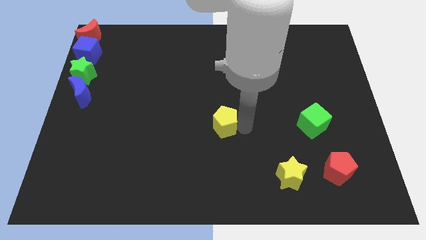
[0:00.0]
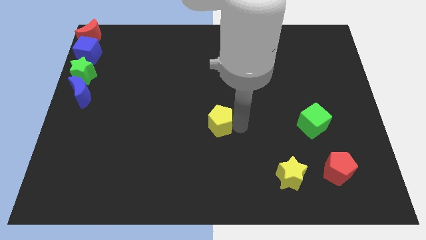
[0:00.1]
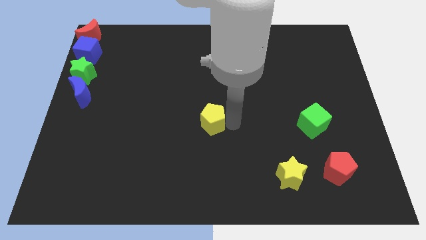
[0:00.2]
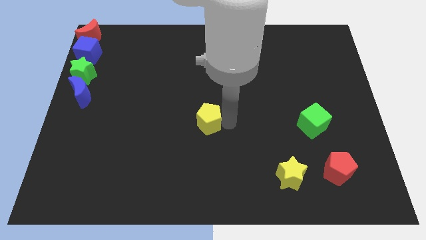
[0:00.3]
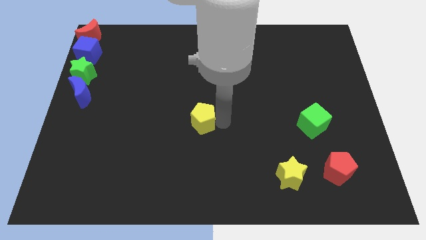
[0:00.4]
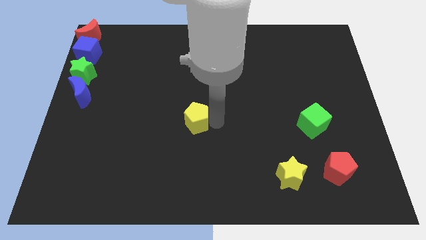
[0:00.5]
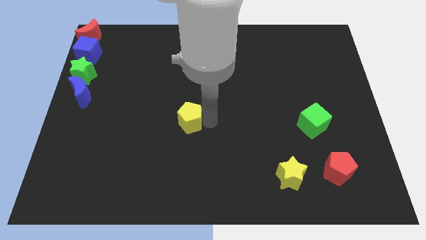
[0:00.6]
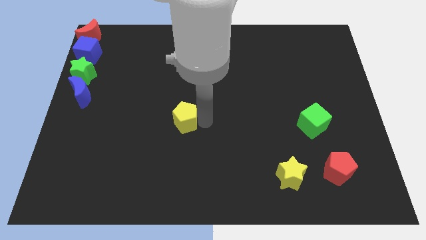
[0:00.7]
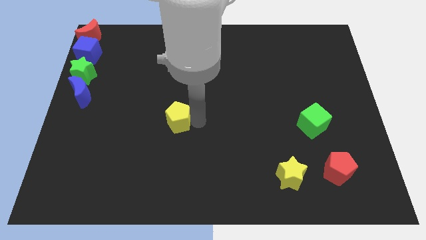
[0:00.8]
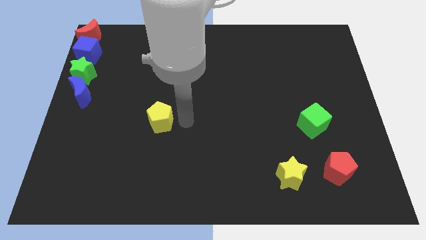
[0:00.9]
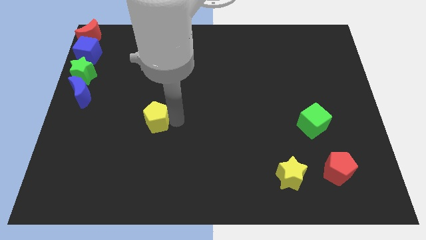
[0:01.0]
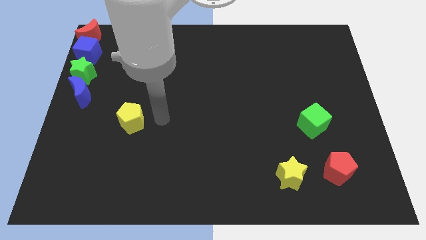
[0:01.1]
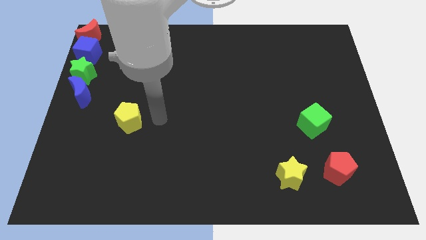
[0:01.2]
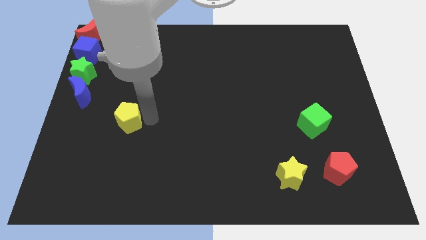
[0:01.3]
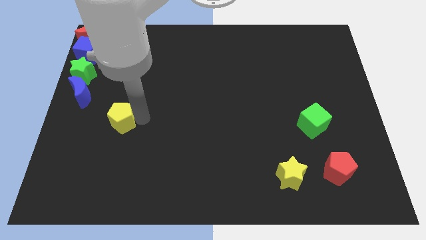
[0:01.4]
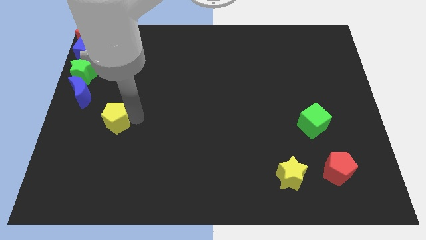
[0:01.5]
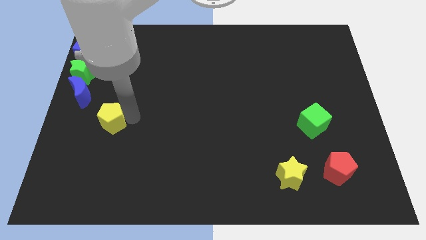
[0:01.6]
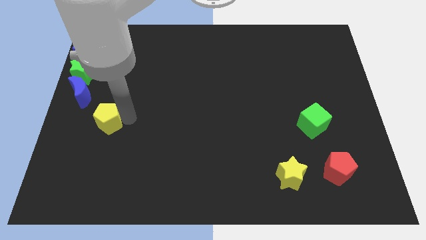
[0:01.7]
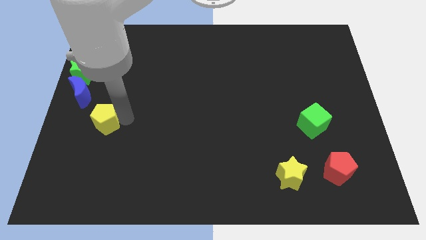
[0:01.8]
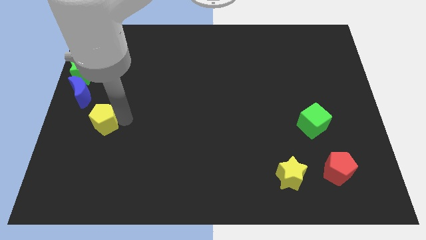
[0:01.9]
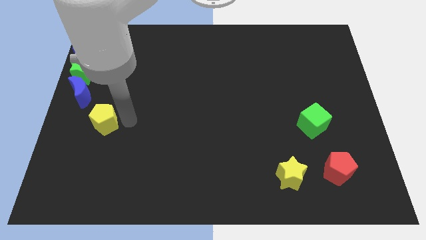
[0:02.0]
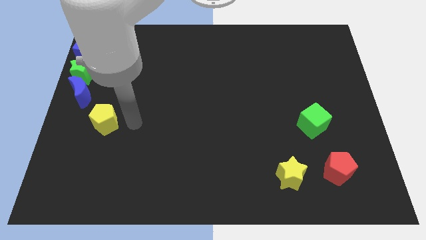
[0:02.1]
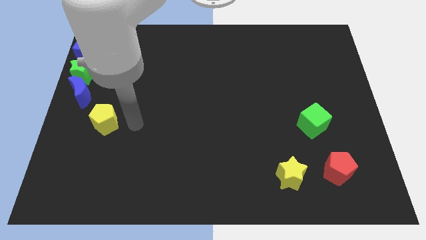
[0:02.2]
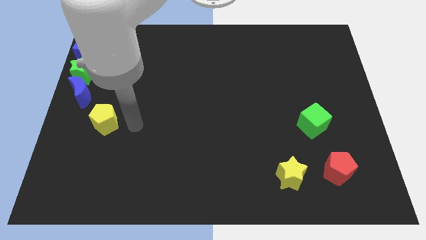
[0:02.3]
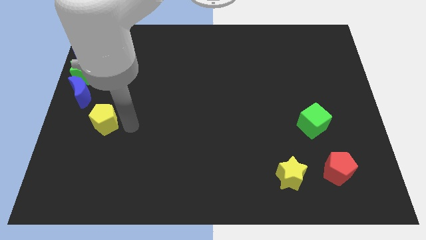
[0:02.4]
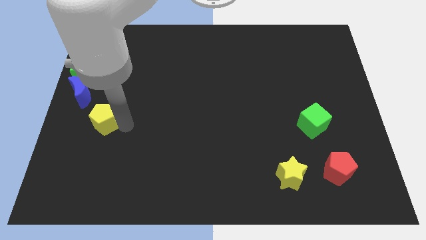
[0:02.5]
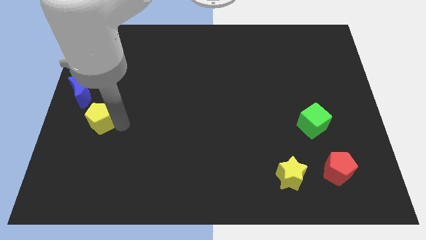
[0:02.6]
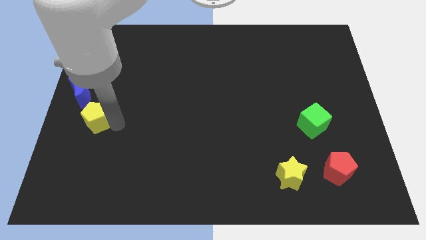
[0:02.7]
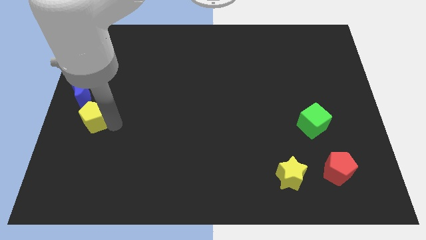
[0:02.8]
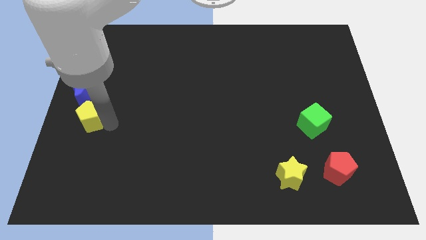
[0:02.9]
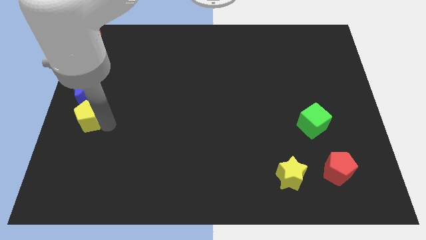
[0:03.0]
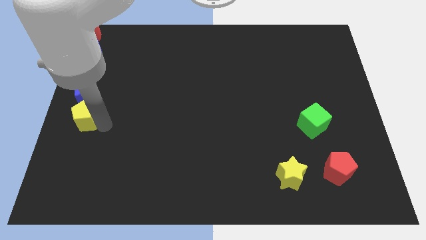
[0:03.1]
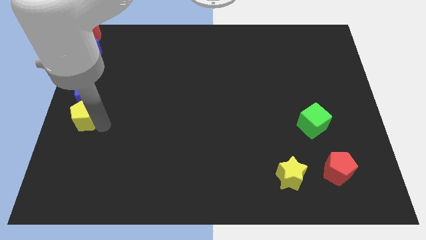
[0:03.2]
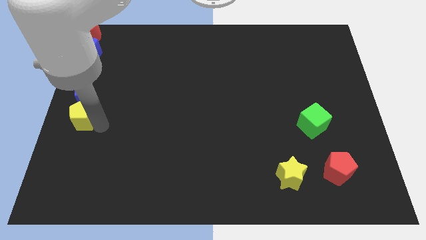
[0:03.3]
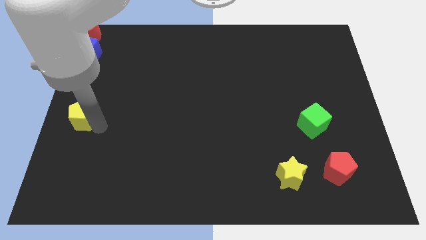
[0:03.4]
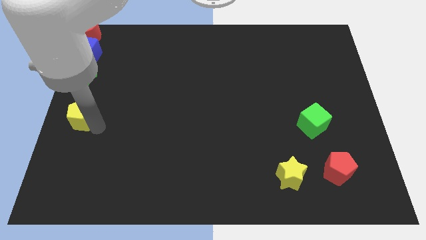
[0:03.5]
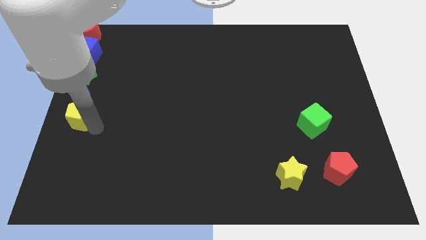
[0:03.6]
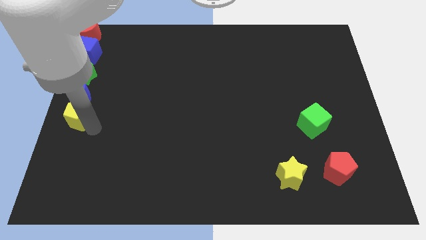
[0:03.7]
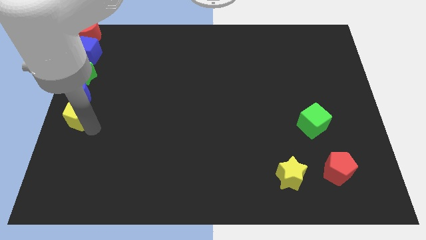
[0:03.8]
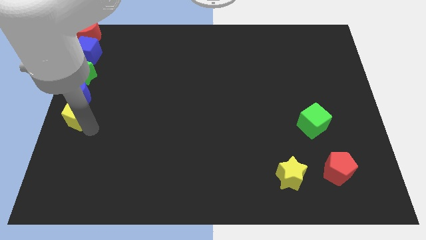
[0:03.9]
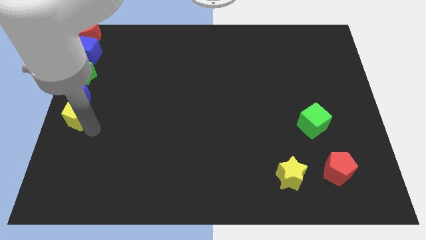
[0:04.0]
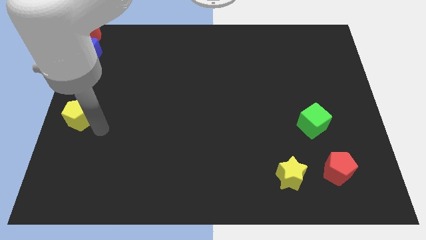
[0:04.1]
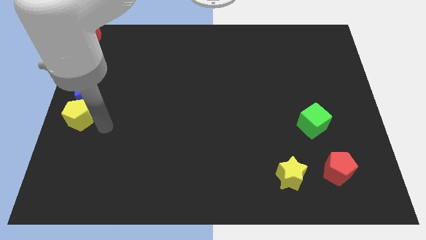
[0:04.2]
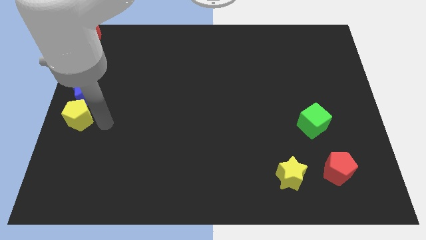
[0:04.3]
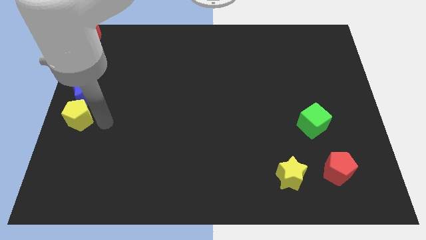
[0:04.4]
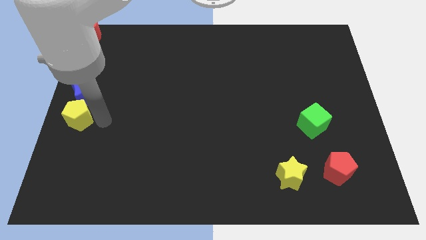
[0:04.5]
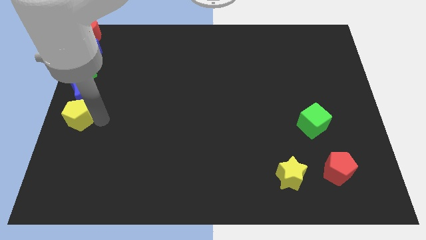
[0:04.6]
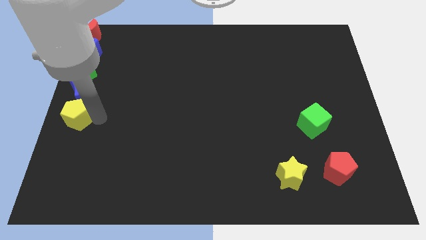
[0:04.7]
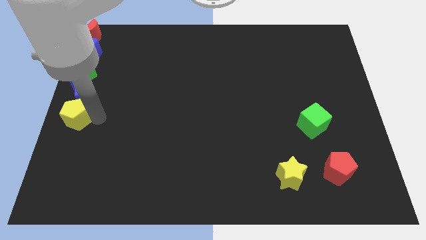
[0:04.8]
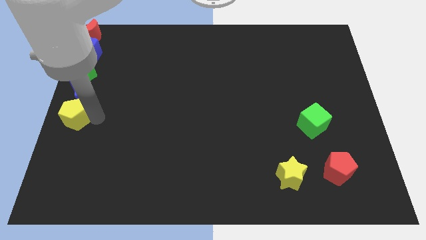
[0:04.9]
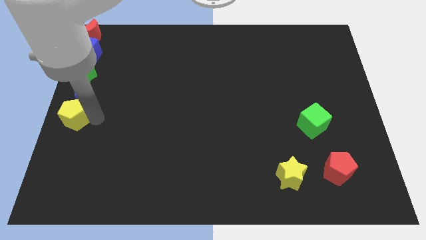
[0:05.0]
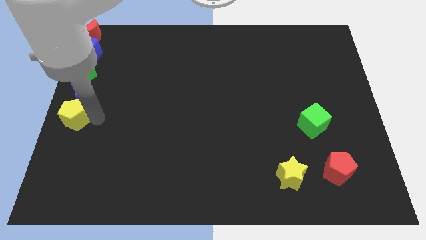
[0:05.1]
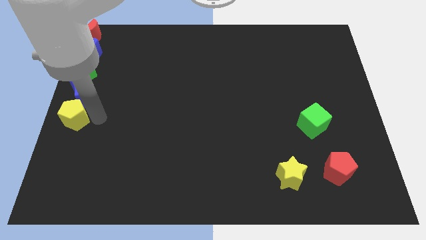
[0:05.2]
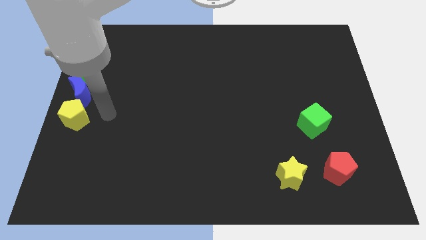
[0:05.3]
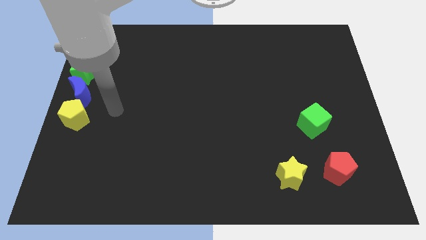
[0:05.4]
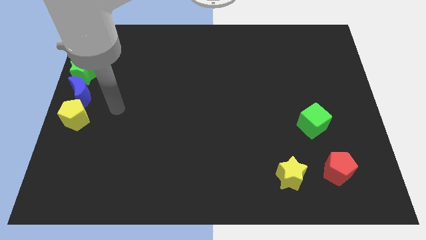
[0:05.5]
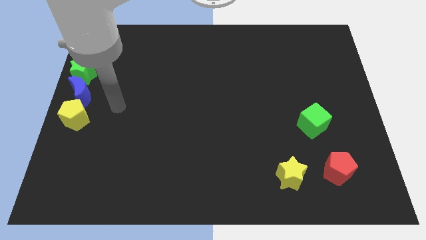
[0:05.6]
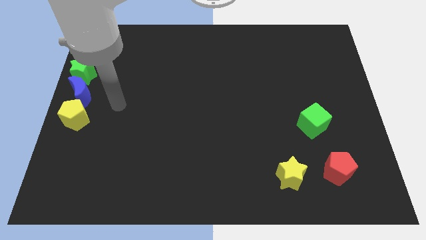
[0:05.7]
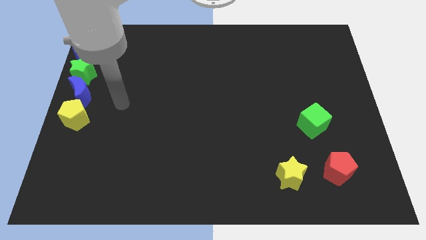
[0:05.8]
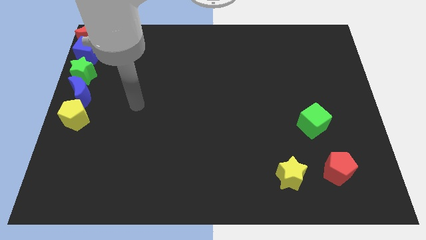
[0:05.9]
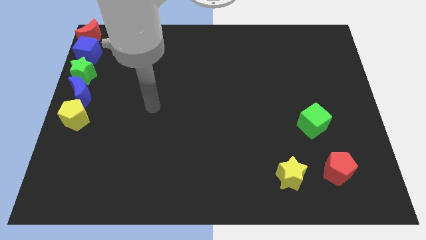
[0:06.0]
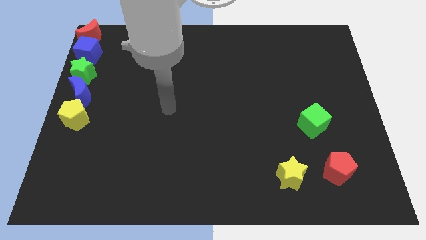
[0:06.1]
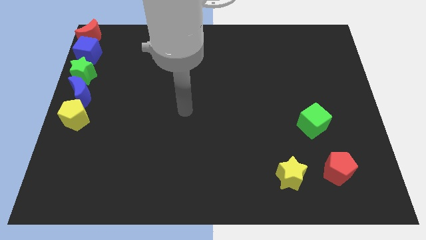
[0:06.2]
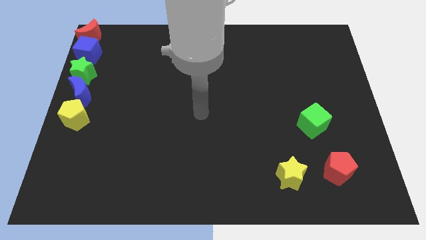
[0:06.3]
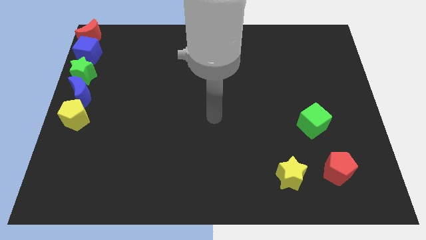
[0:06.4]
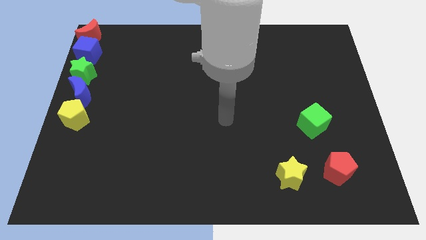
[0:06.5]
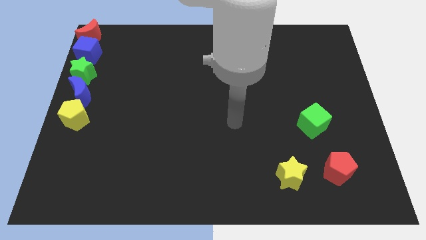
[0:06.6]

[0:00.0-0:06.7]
push the yellow pentagon to the left side of the board

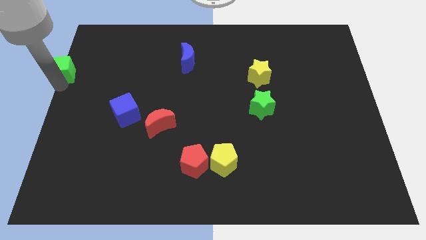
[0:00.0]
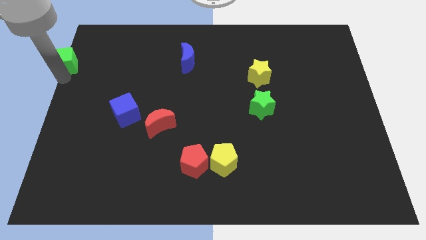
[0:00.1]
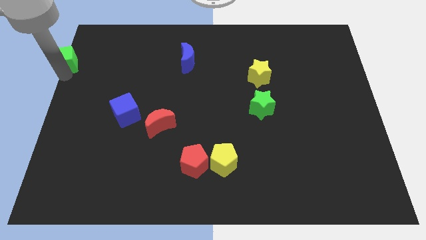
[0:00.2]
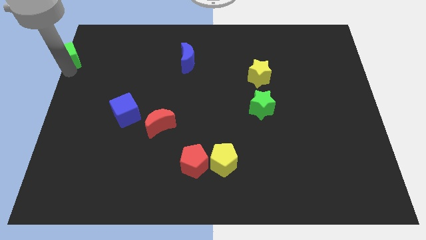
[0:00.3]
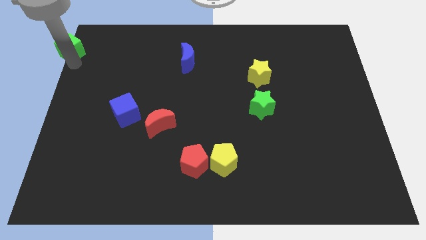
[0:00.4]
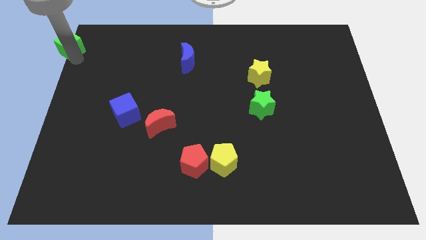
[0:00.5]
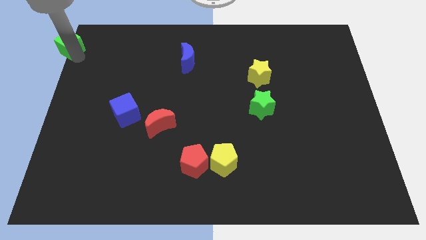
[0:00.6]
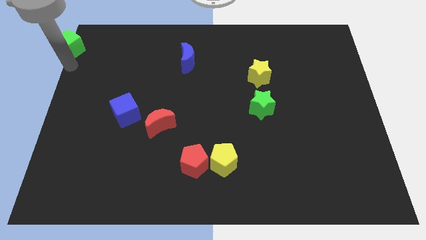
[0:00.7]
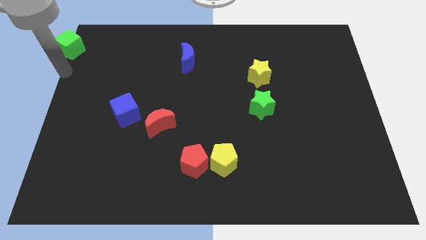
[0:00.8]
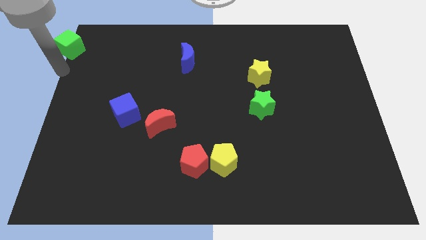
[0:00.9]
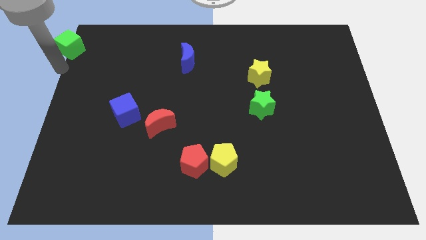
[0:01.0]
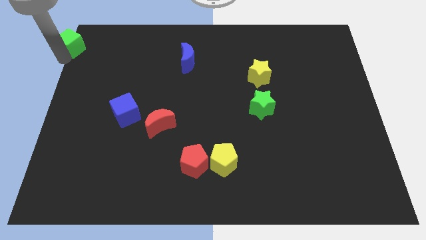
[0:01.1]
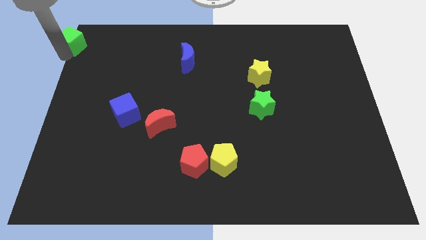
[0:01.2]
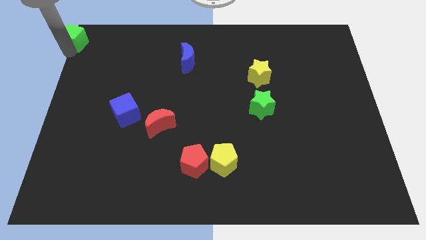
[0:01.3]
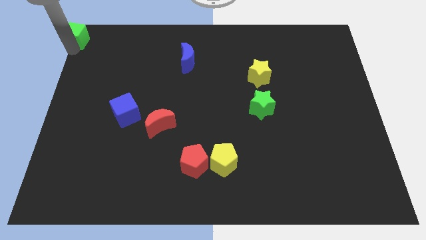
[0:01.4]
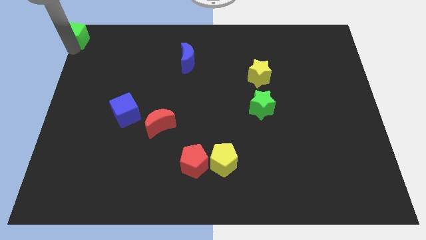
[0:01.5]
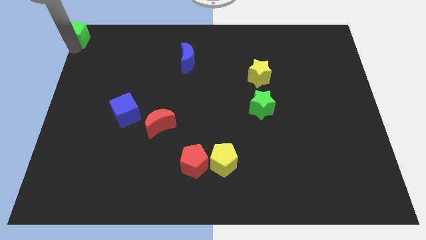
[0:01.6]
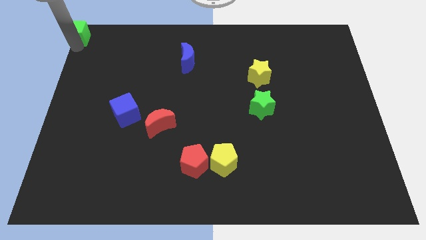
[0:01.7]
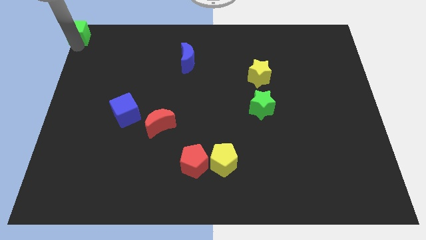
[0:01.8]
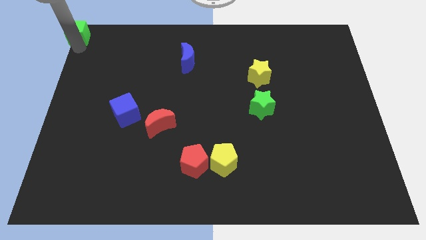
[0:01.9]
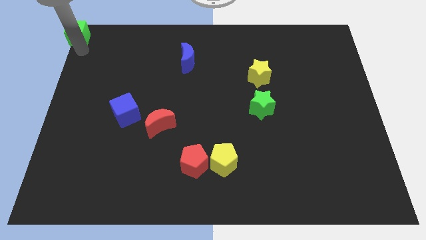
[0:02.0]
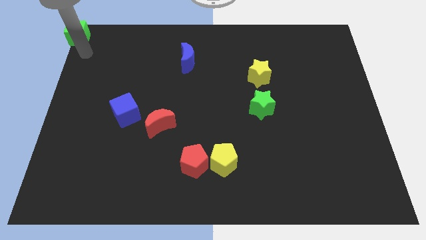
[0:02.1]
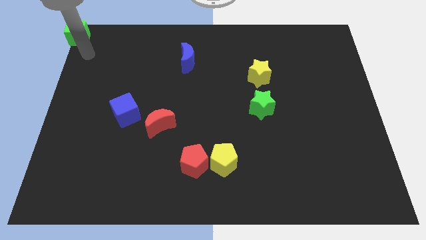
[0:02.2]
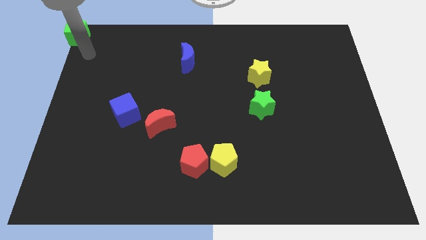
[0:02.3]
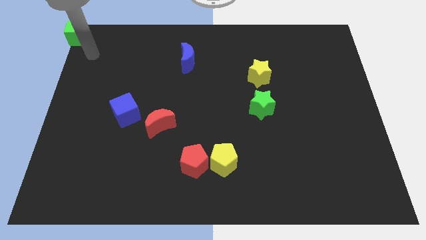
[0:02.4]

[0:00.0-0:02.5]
move the green cube to the top left of the board
